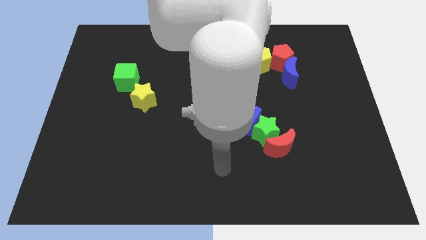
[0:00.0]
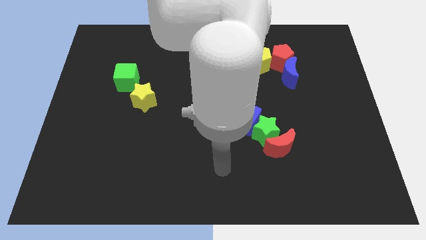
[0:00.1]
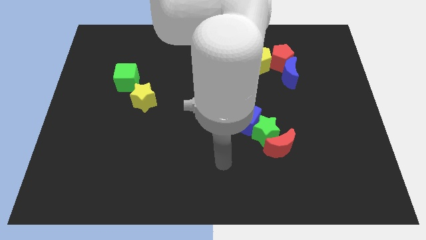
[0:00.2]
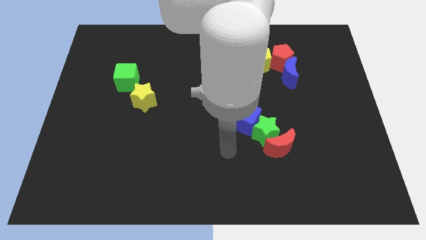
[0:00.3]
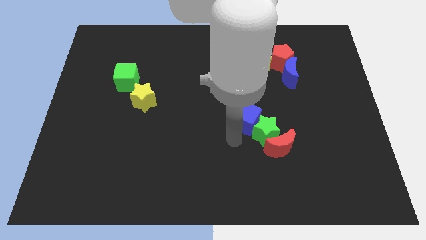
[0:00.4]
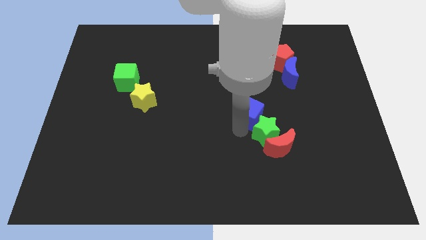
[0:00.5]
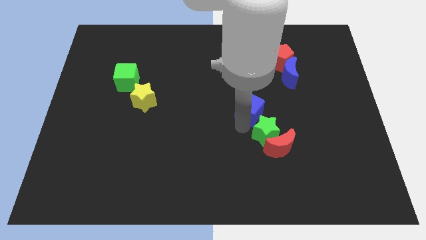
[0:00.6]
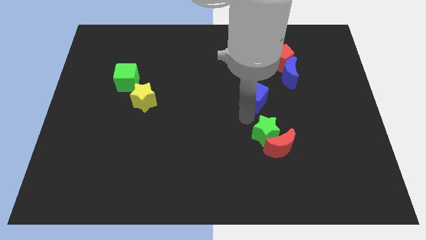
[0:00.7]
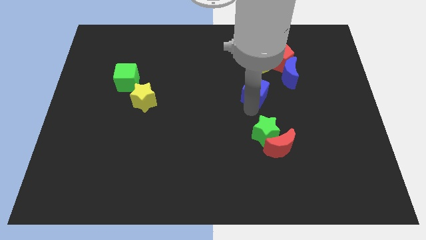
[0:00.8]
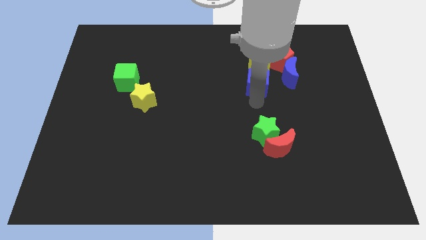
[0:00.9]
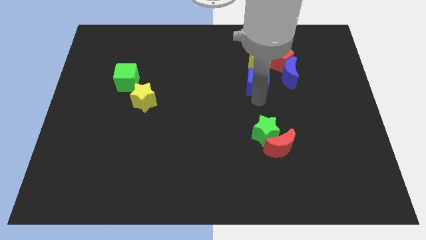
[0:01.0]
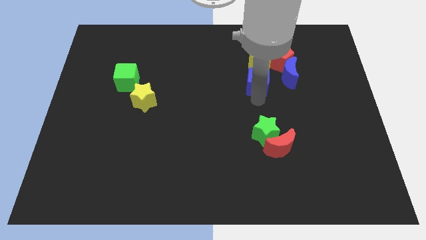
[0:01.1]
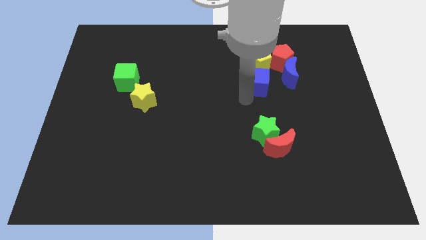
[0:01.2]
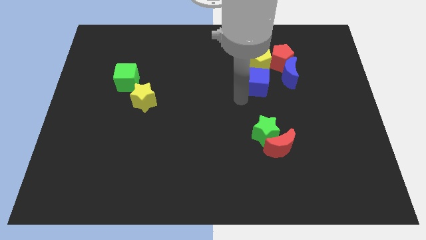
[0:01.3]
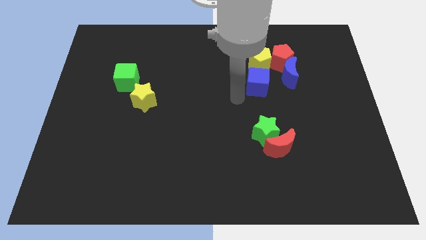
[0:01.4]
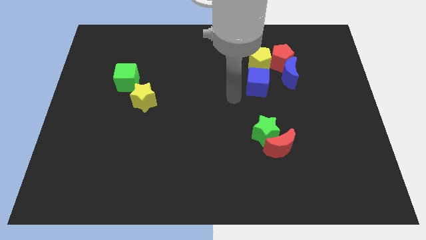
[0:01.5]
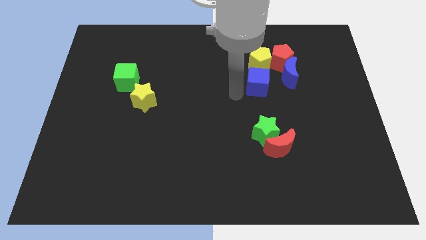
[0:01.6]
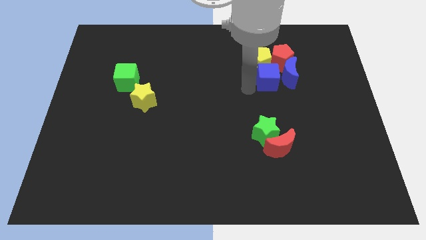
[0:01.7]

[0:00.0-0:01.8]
move the blue cube towards up

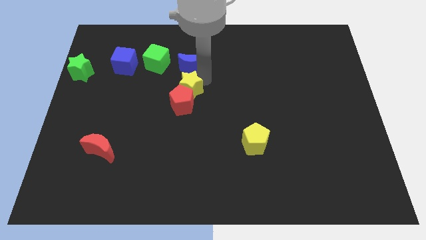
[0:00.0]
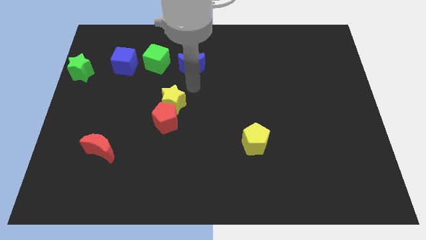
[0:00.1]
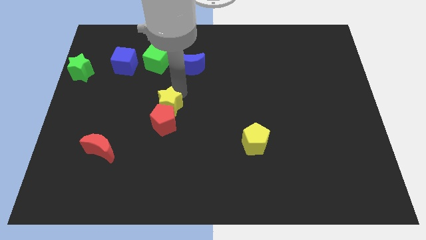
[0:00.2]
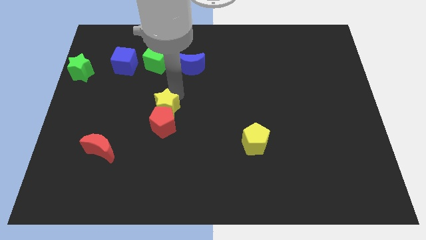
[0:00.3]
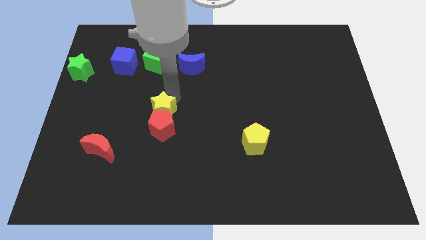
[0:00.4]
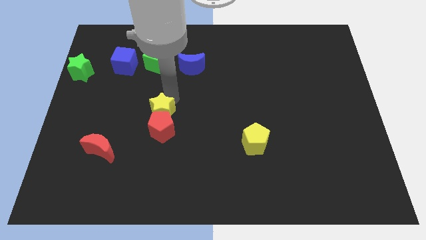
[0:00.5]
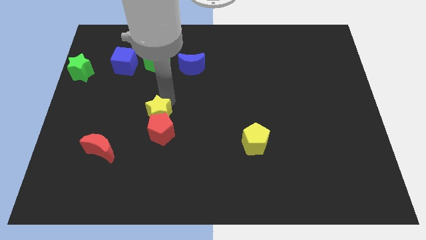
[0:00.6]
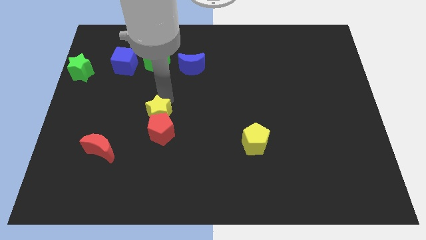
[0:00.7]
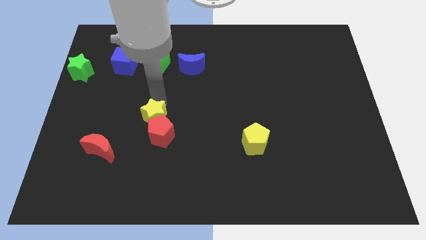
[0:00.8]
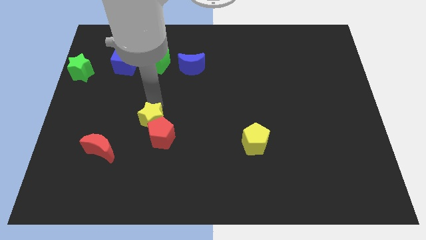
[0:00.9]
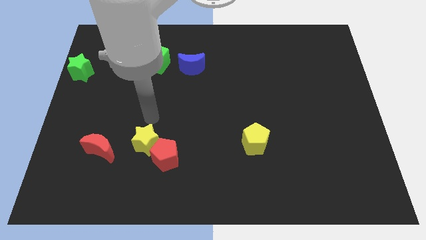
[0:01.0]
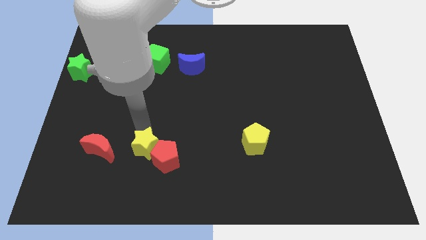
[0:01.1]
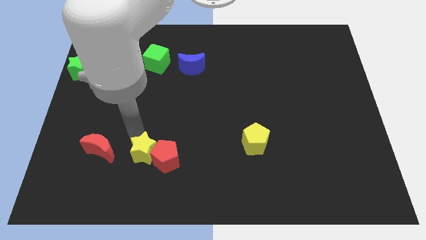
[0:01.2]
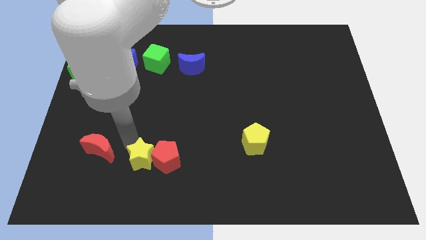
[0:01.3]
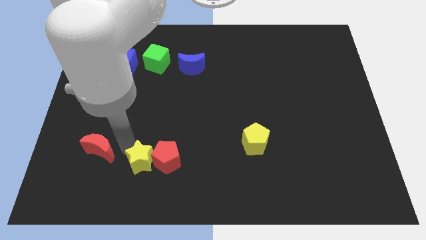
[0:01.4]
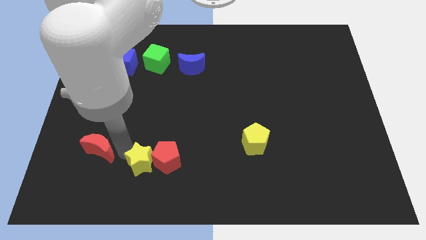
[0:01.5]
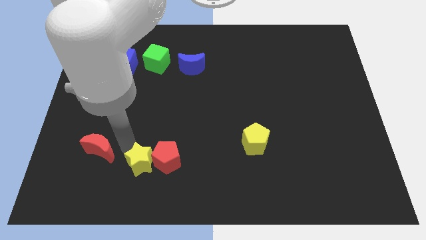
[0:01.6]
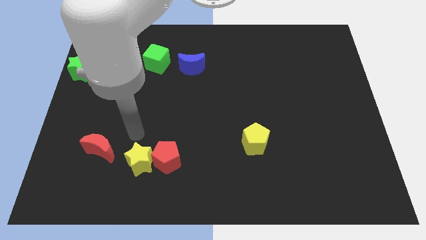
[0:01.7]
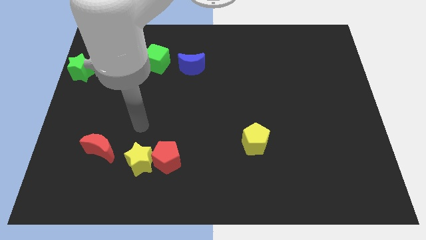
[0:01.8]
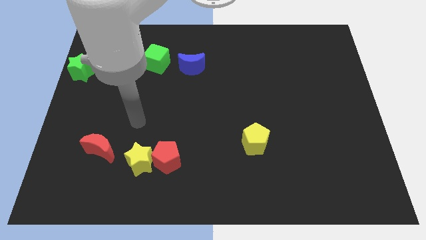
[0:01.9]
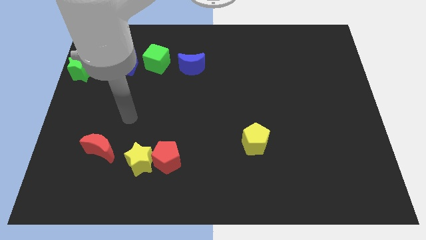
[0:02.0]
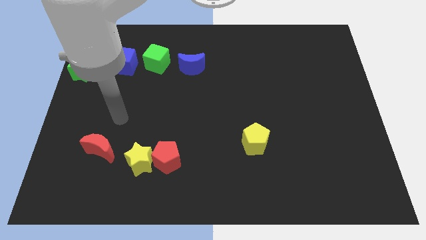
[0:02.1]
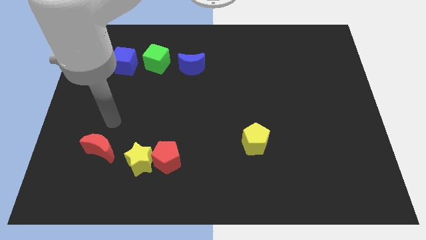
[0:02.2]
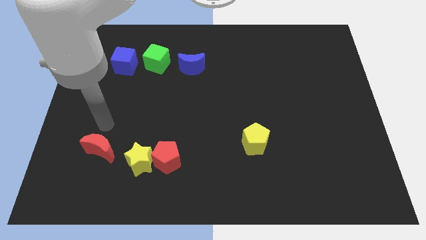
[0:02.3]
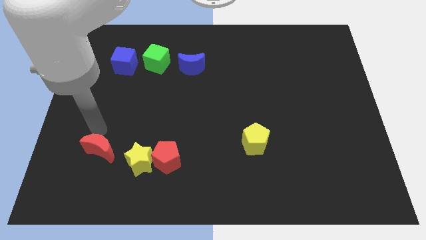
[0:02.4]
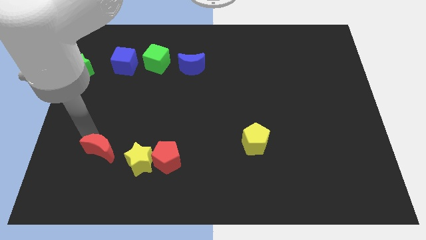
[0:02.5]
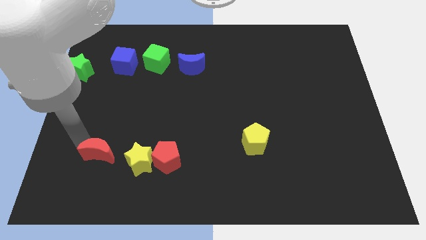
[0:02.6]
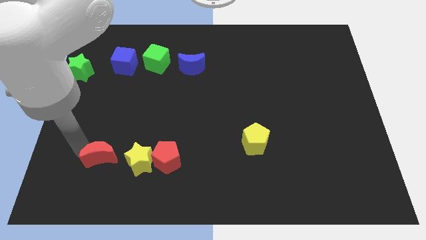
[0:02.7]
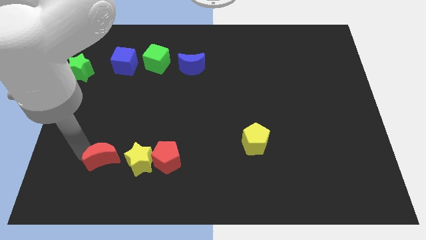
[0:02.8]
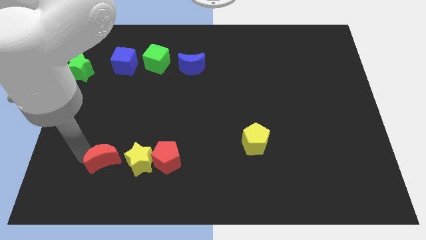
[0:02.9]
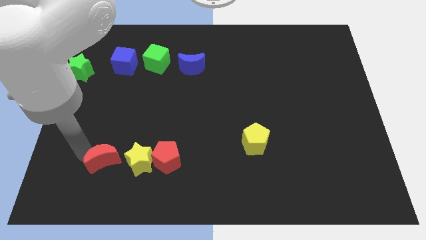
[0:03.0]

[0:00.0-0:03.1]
make the yellow star and red pentagon parallel to red crescent

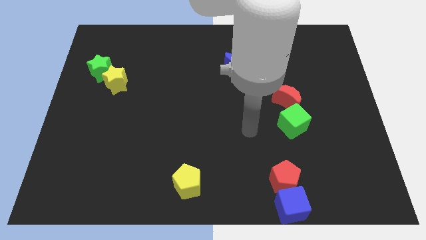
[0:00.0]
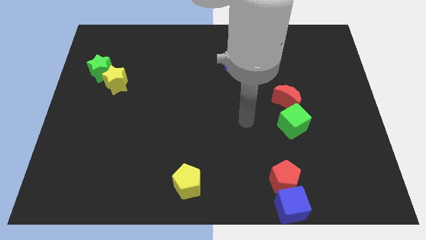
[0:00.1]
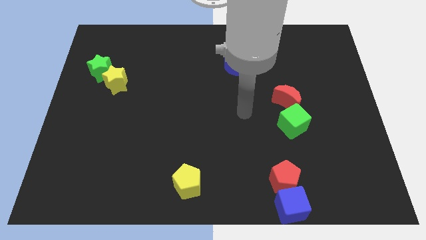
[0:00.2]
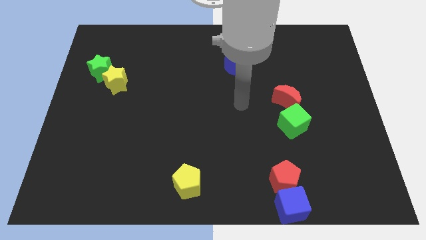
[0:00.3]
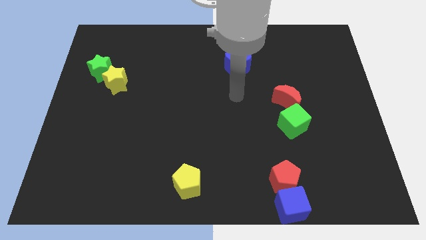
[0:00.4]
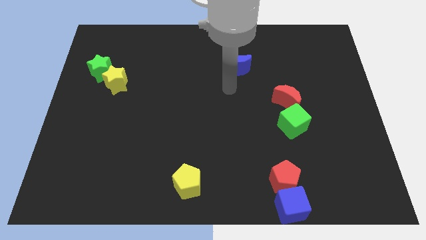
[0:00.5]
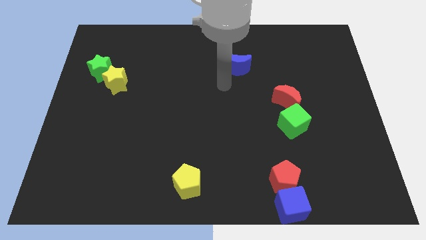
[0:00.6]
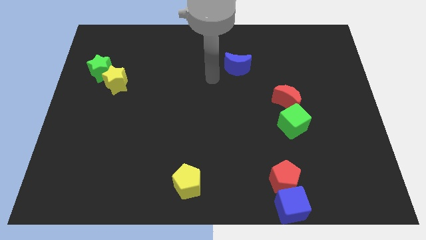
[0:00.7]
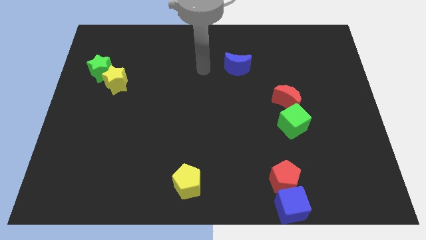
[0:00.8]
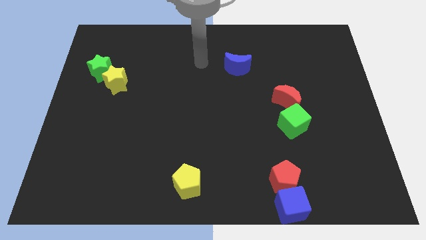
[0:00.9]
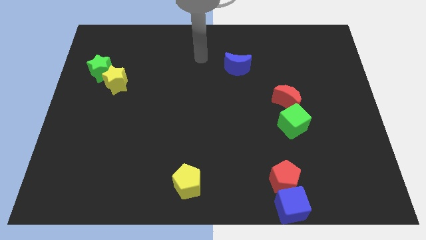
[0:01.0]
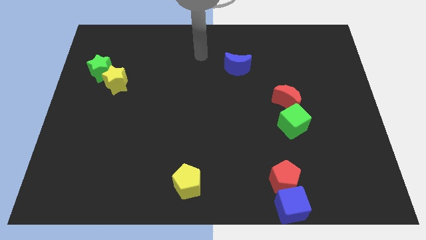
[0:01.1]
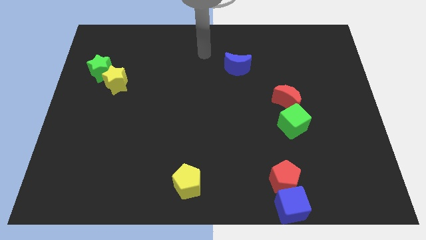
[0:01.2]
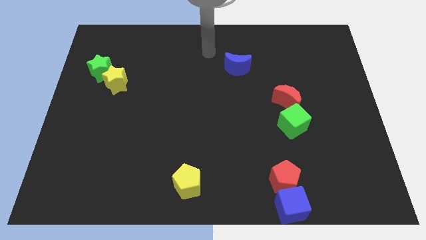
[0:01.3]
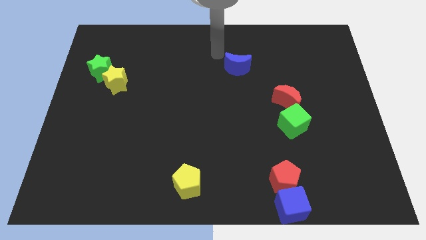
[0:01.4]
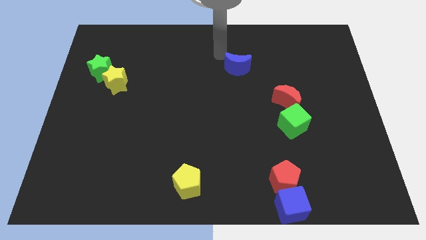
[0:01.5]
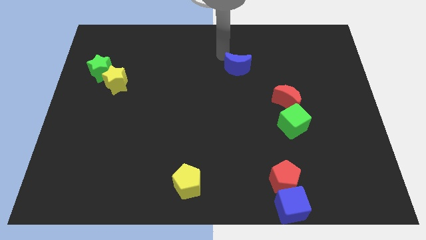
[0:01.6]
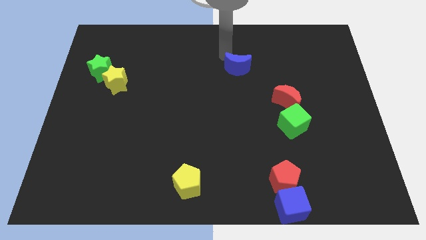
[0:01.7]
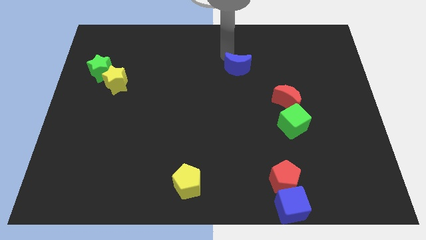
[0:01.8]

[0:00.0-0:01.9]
slightly touch the blue moon

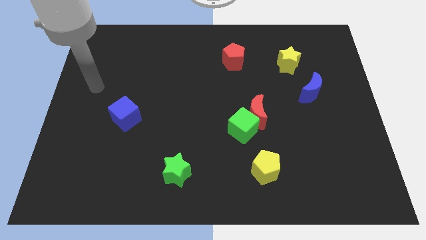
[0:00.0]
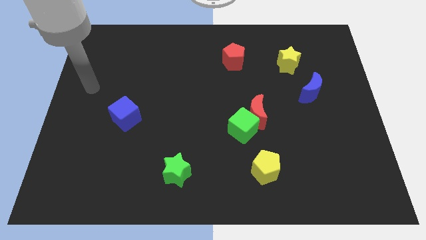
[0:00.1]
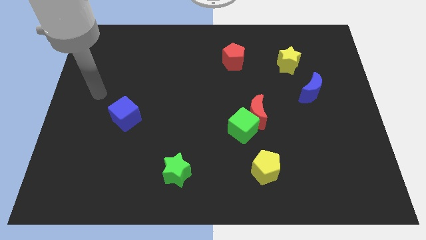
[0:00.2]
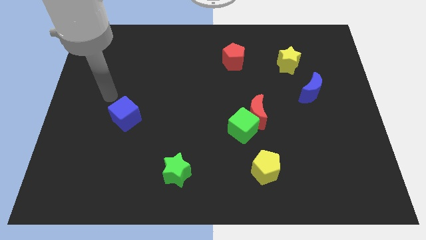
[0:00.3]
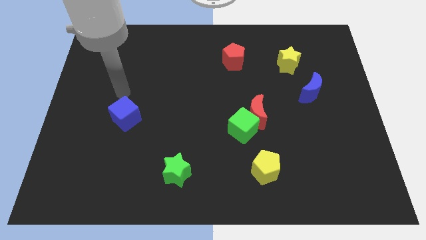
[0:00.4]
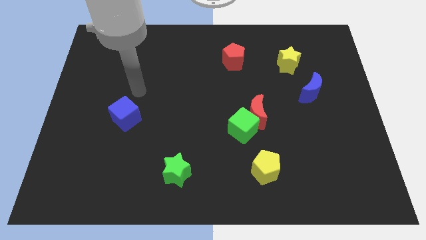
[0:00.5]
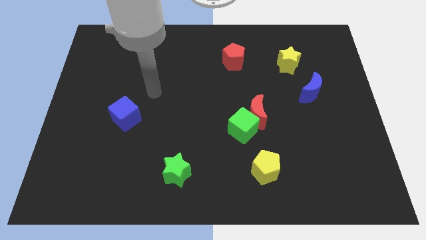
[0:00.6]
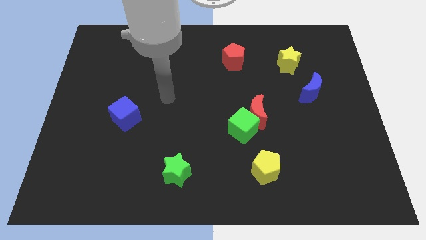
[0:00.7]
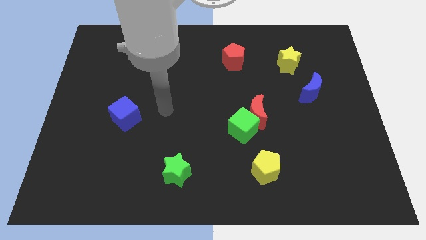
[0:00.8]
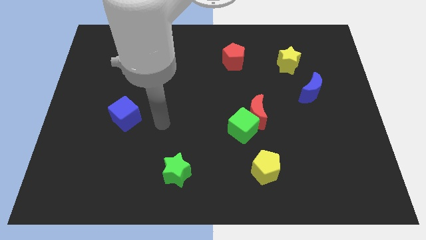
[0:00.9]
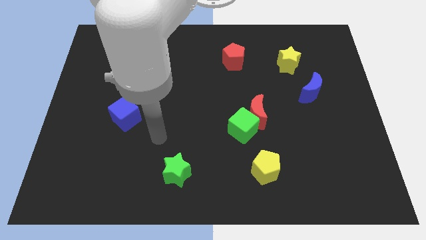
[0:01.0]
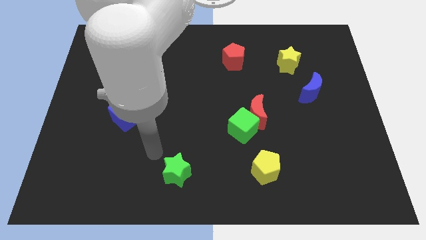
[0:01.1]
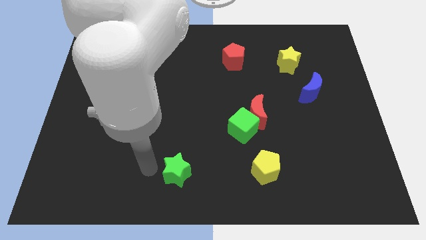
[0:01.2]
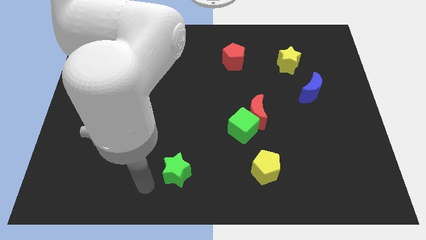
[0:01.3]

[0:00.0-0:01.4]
move your arm to the left of the green star

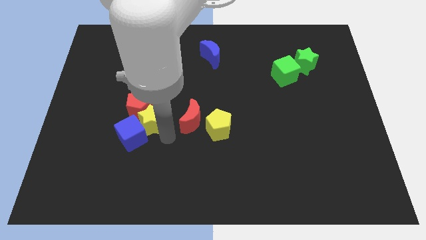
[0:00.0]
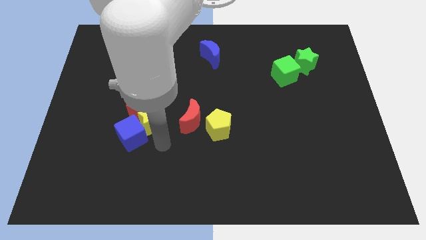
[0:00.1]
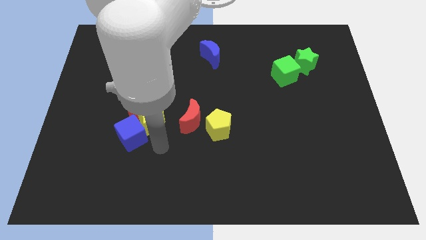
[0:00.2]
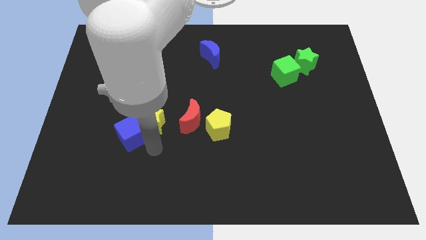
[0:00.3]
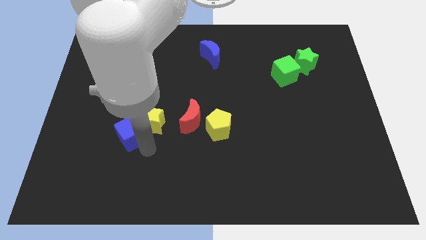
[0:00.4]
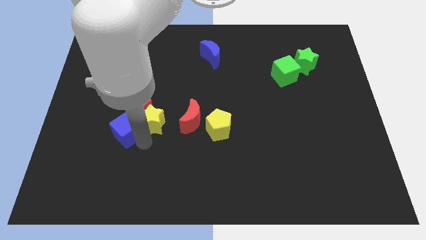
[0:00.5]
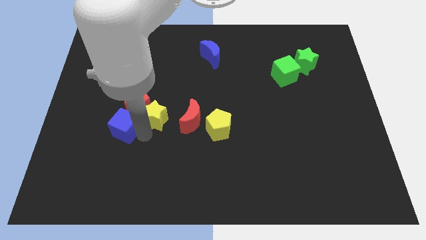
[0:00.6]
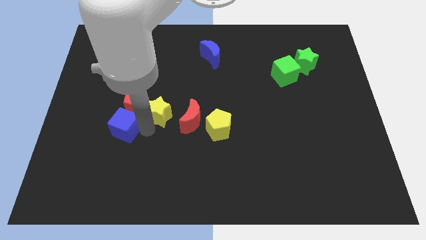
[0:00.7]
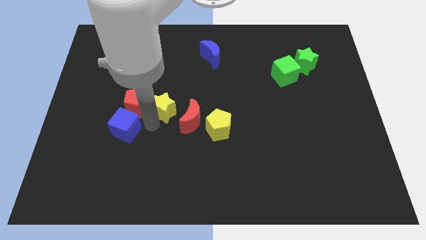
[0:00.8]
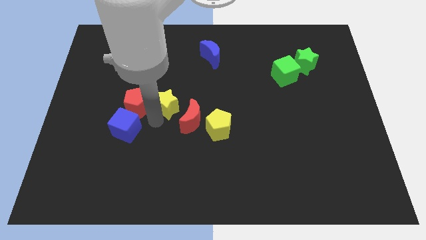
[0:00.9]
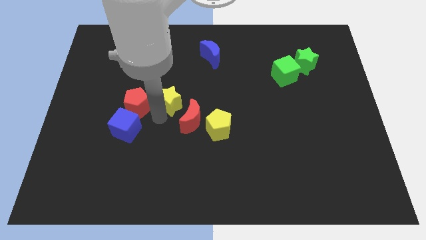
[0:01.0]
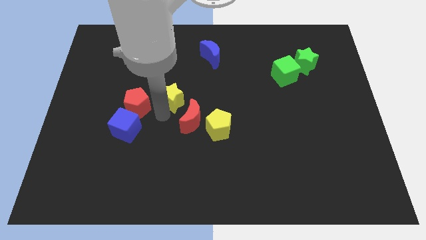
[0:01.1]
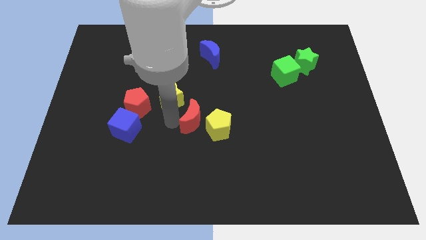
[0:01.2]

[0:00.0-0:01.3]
push the yellow star upwards slightly
